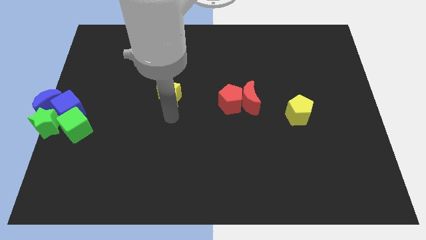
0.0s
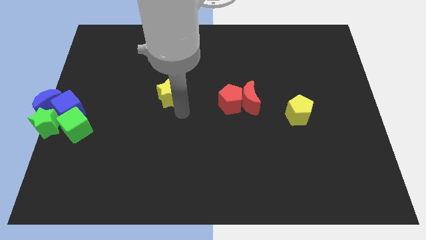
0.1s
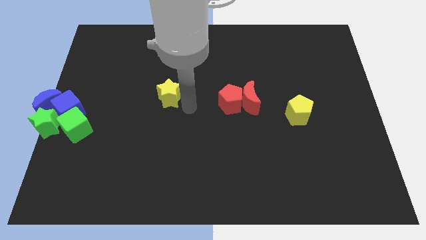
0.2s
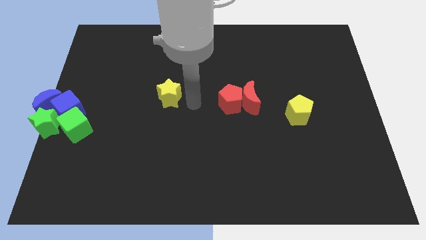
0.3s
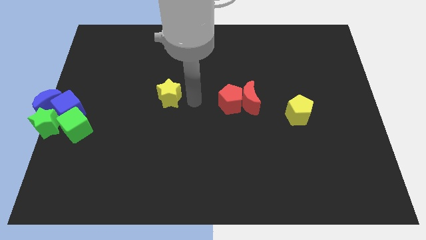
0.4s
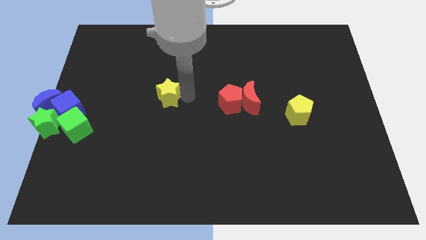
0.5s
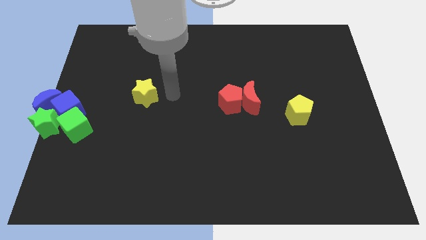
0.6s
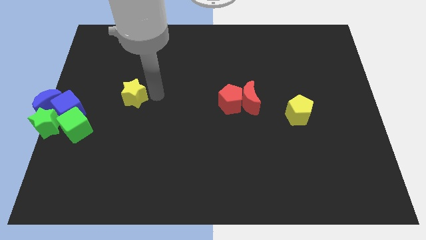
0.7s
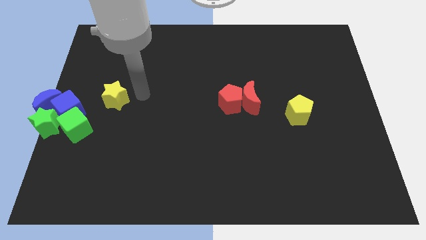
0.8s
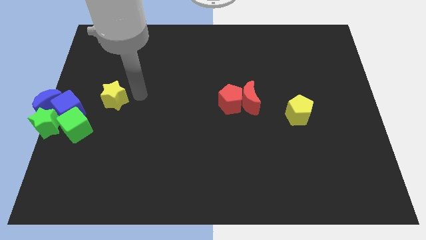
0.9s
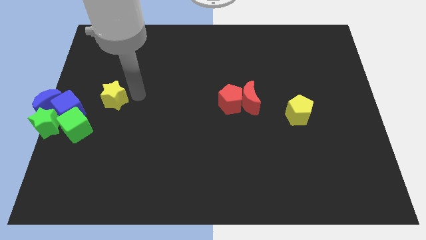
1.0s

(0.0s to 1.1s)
push yellow star towards blue cube

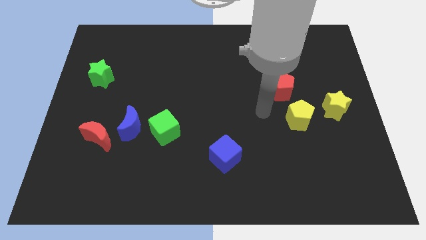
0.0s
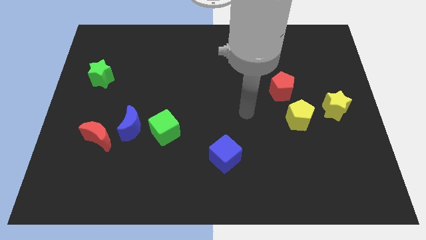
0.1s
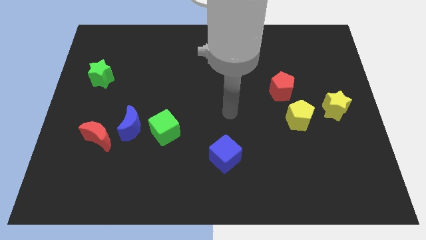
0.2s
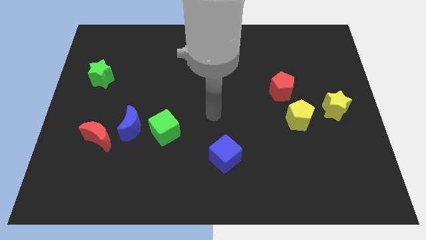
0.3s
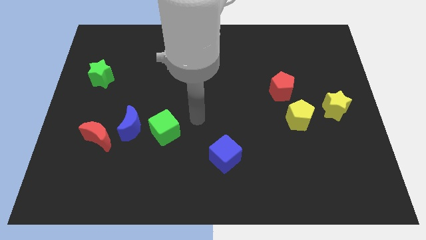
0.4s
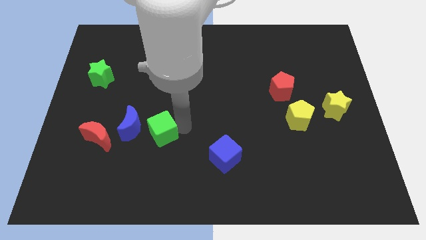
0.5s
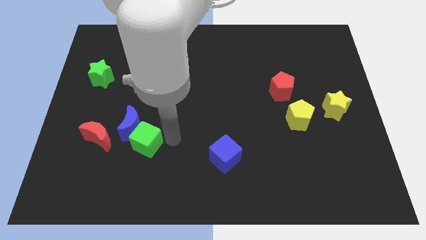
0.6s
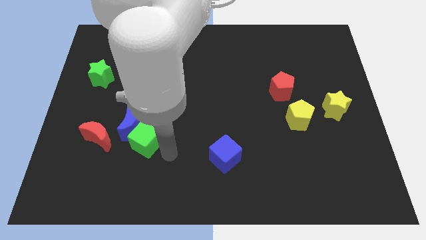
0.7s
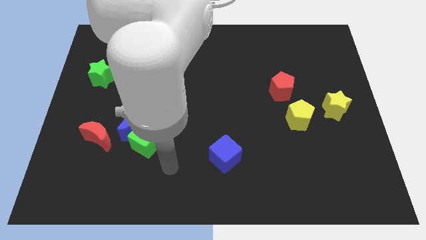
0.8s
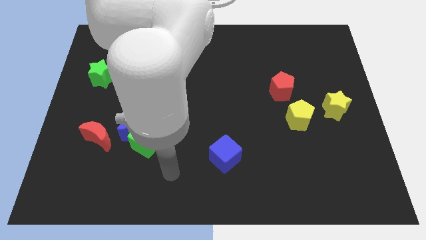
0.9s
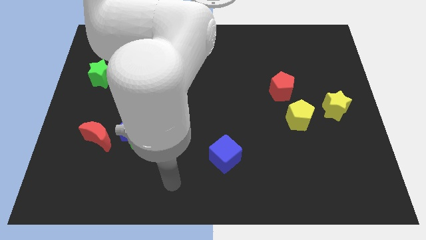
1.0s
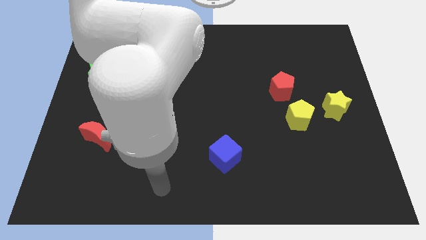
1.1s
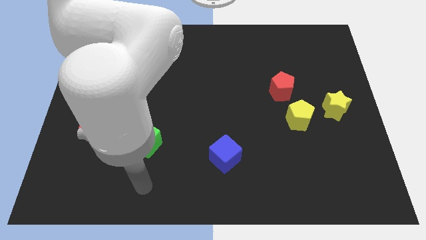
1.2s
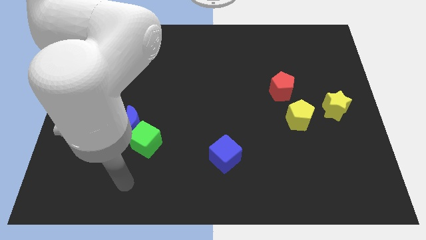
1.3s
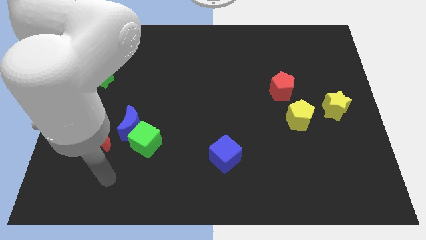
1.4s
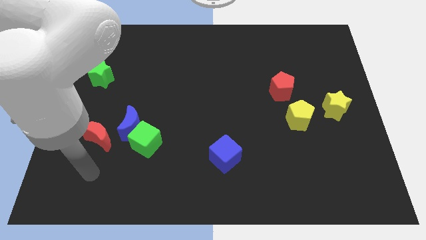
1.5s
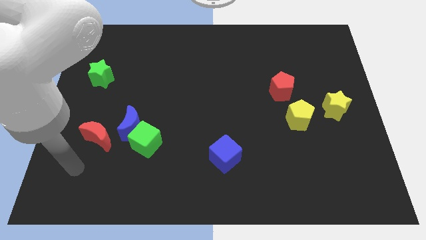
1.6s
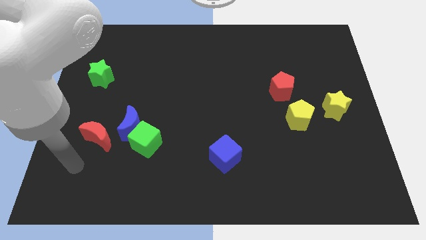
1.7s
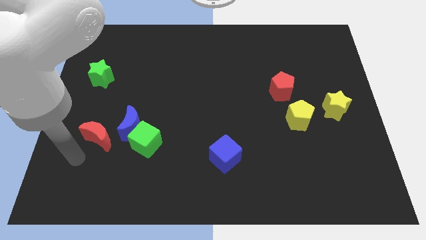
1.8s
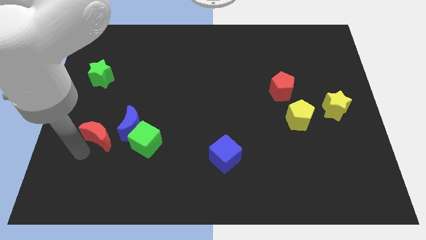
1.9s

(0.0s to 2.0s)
move the green cube slightly to the bottom

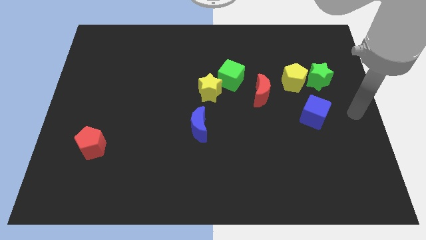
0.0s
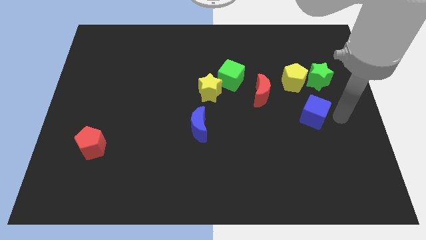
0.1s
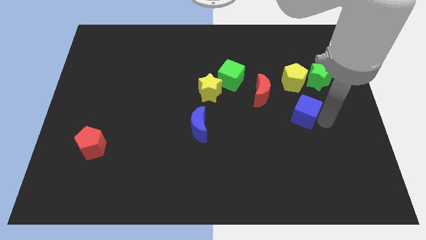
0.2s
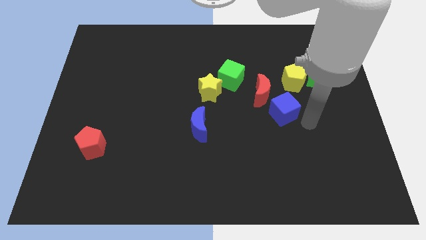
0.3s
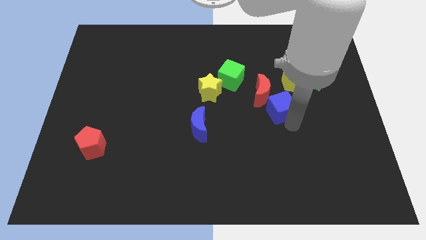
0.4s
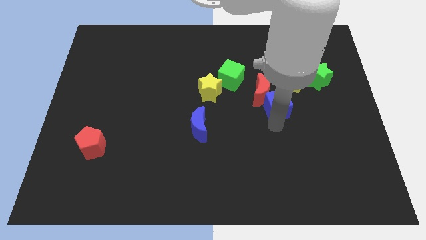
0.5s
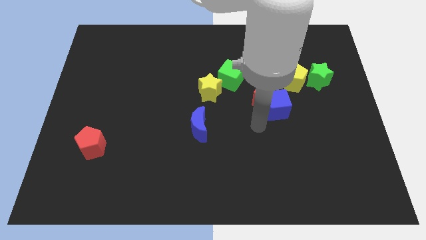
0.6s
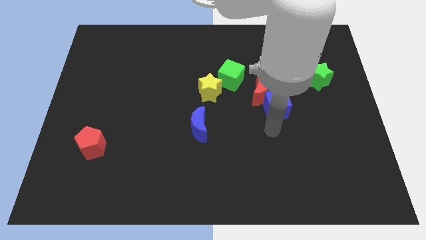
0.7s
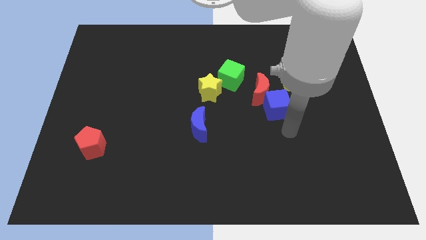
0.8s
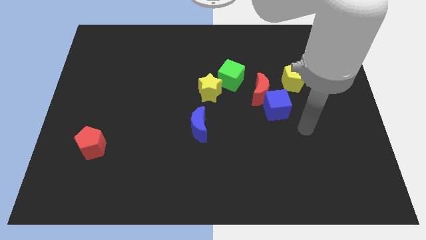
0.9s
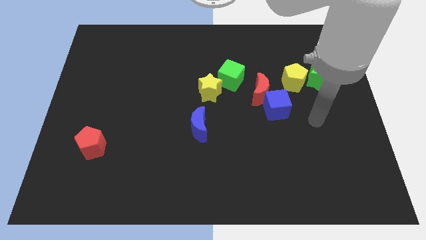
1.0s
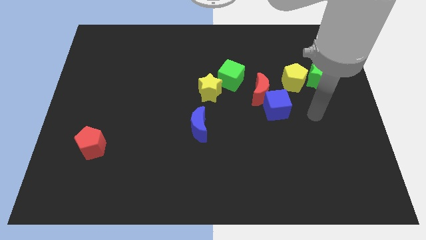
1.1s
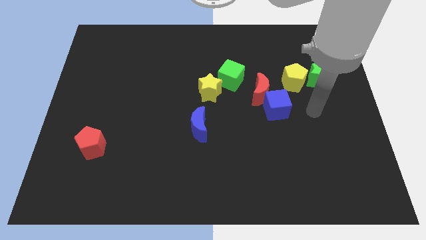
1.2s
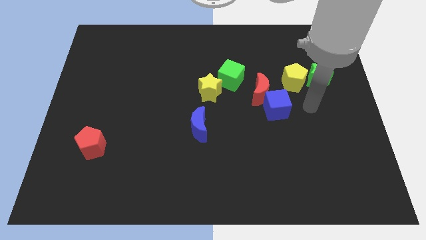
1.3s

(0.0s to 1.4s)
slide the blue cube diagonal to the green cube

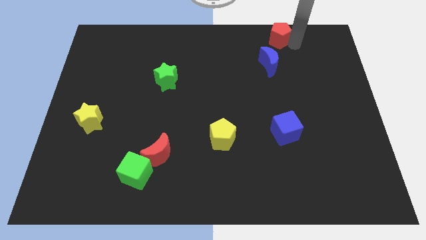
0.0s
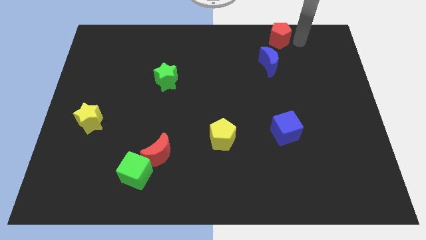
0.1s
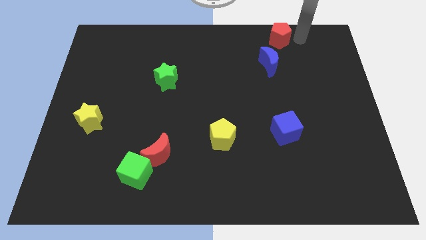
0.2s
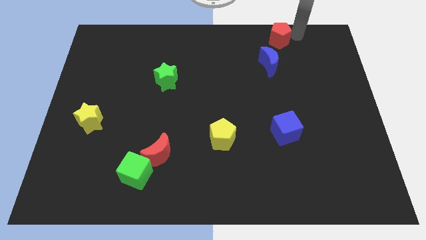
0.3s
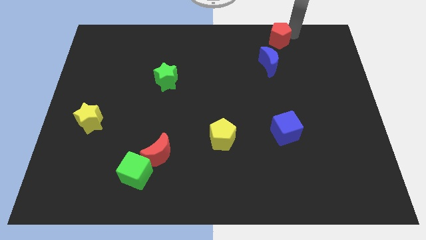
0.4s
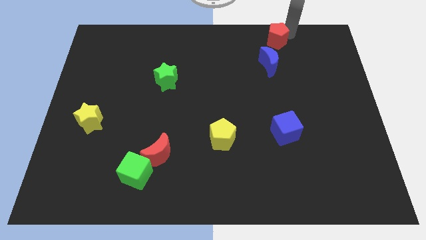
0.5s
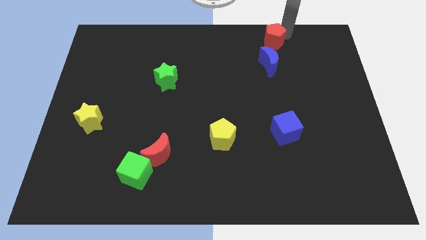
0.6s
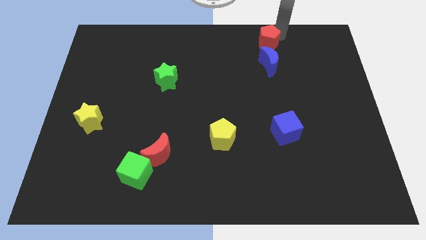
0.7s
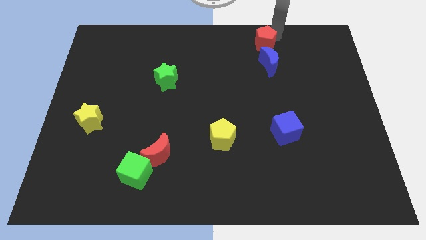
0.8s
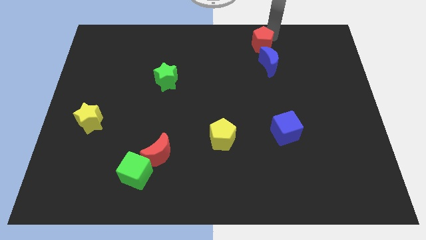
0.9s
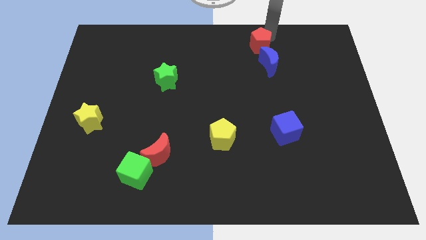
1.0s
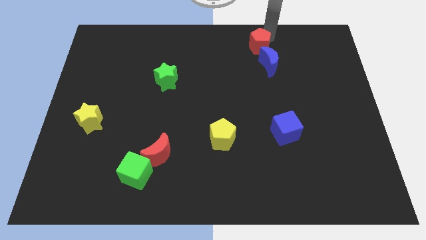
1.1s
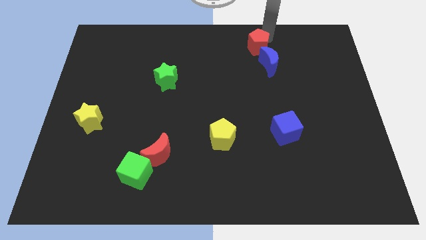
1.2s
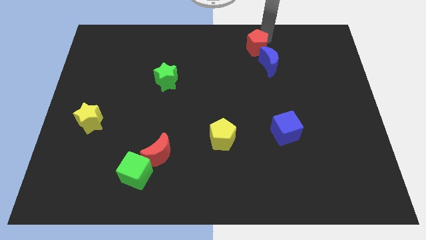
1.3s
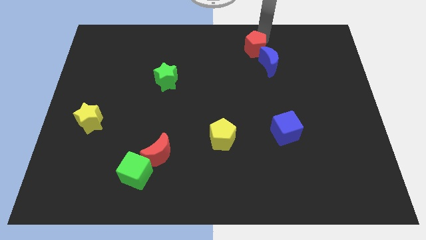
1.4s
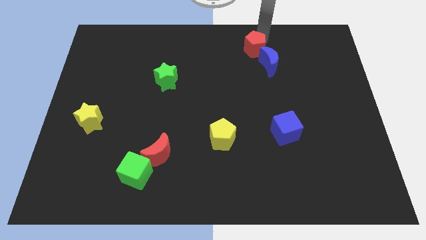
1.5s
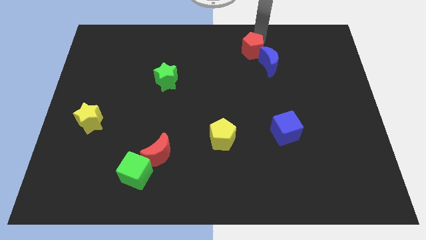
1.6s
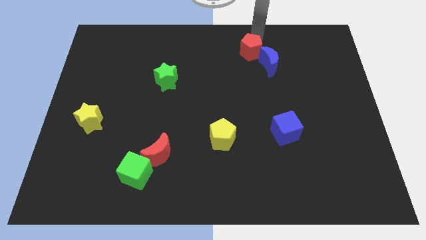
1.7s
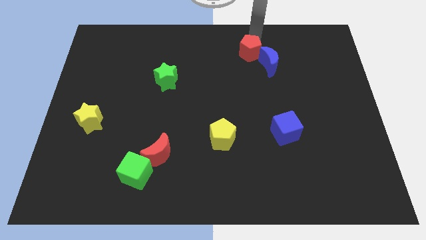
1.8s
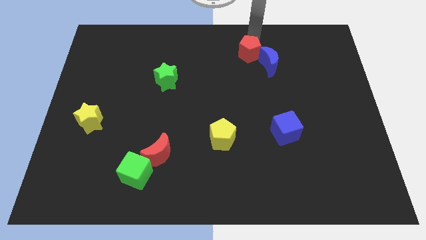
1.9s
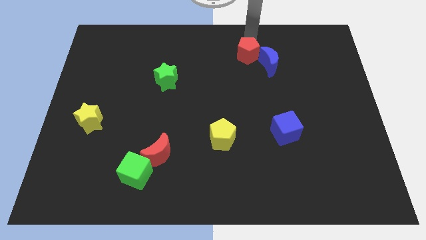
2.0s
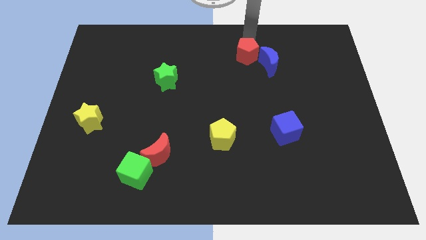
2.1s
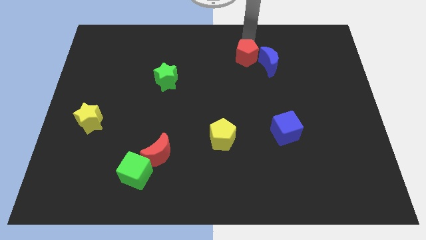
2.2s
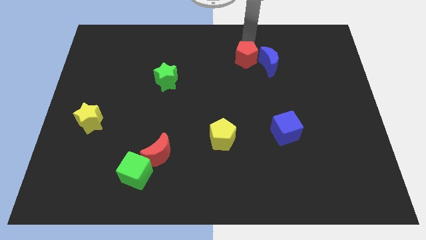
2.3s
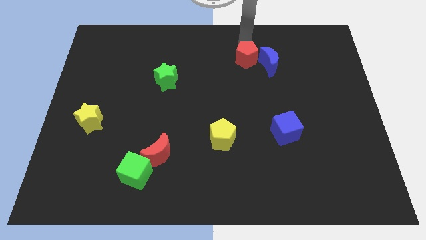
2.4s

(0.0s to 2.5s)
move the red pentagon close to the blue crescent

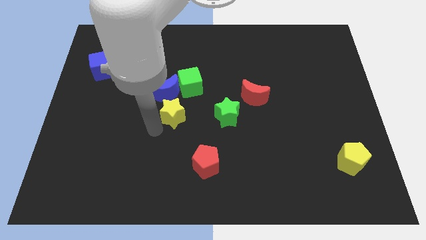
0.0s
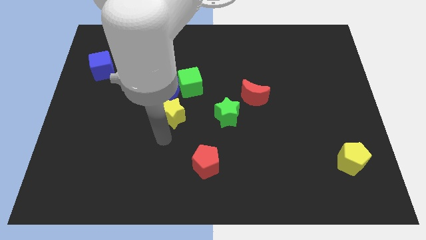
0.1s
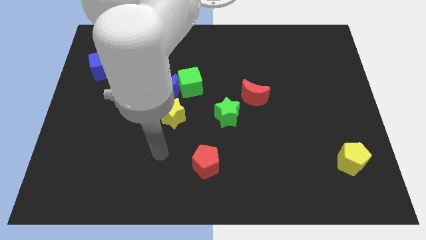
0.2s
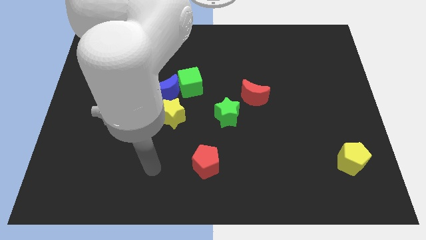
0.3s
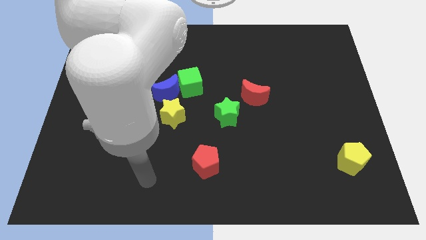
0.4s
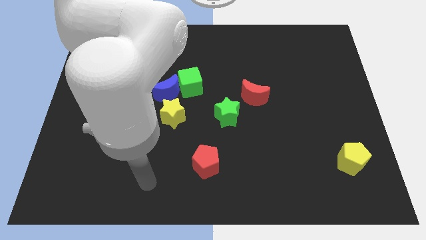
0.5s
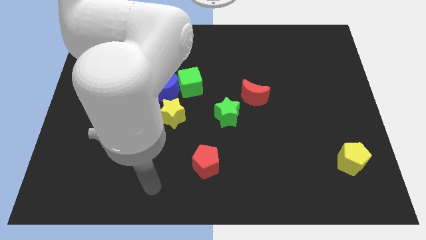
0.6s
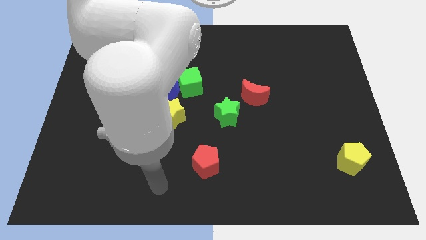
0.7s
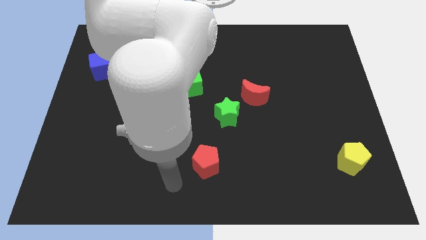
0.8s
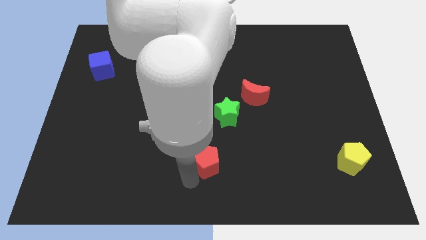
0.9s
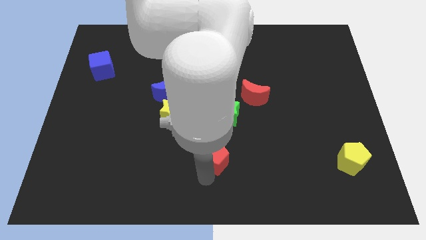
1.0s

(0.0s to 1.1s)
touch the bottom of red pentagon

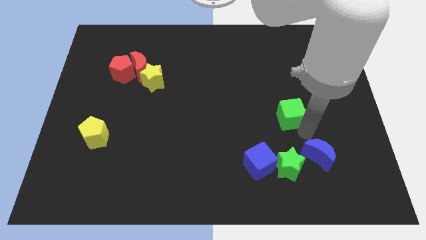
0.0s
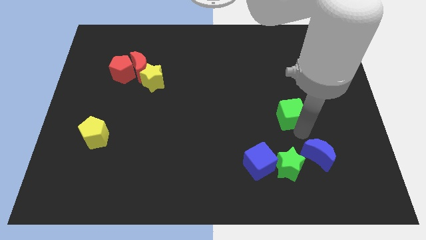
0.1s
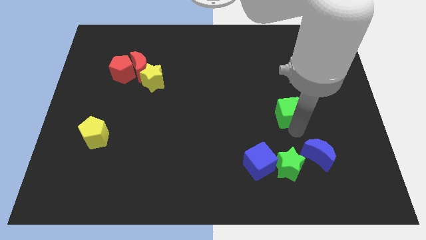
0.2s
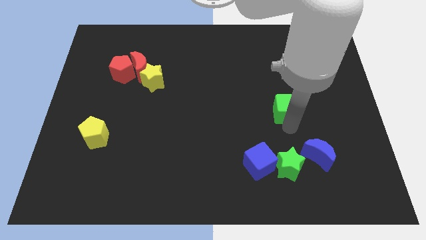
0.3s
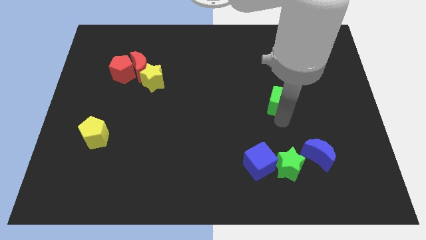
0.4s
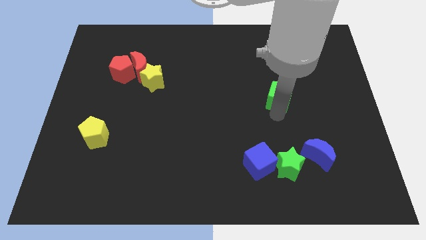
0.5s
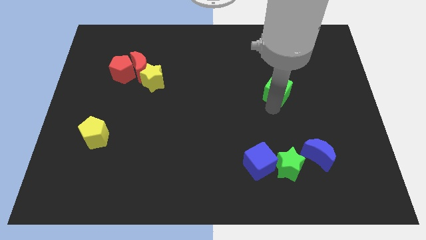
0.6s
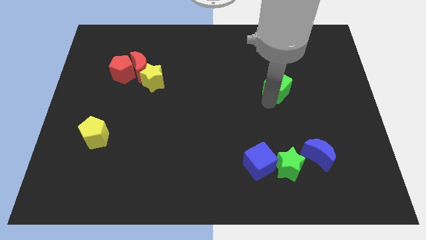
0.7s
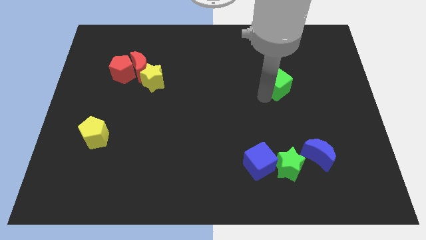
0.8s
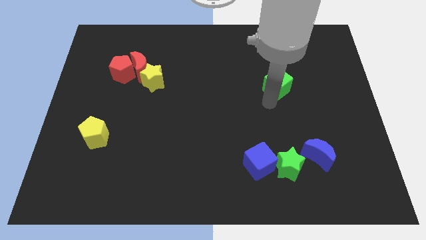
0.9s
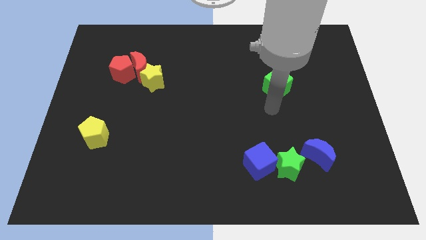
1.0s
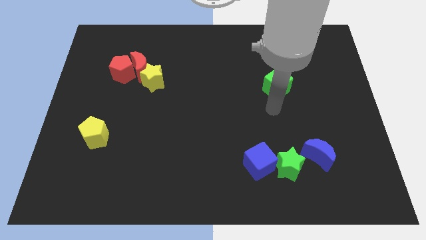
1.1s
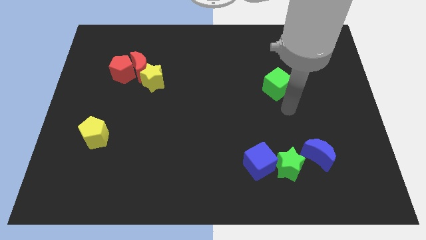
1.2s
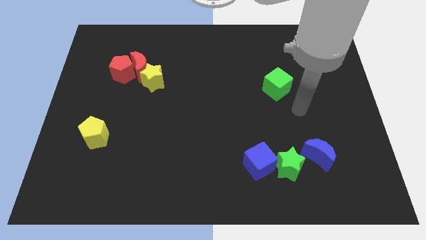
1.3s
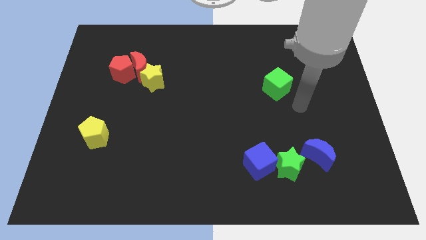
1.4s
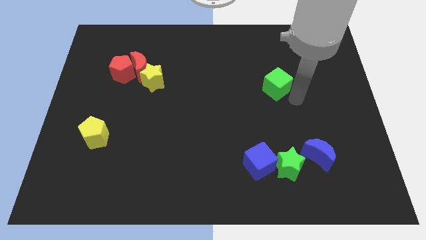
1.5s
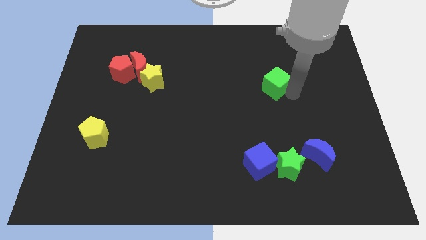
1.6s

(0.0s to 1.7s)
move the green cube to the top
